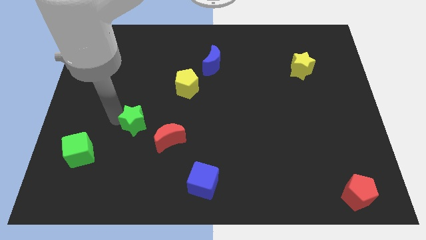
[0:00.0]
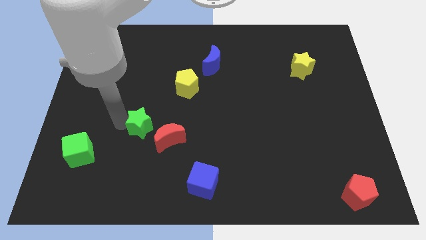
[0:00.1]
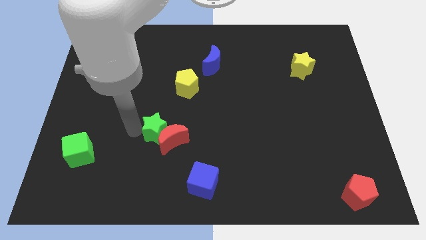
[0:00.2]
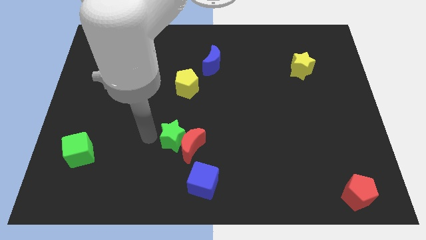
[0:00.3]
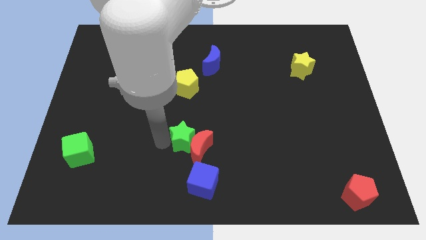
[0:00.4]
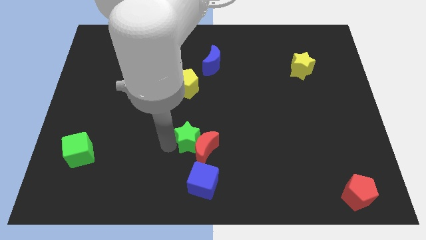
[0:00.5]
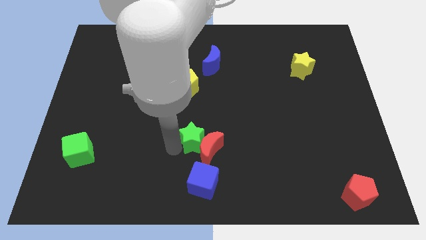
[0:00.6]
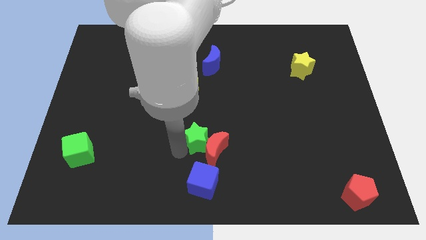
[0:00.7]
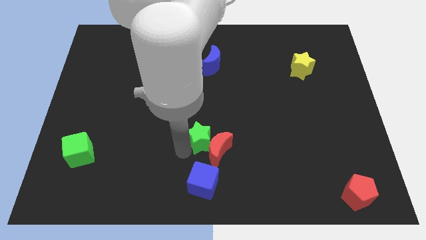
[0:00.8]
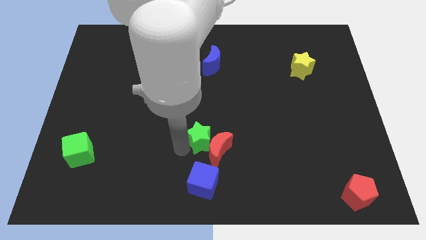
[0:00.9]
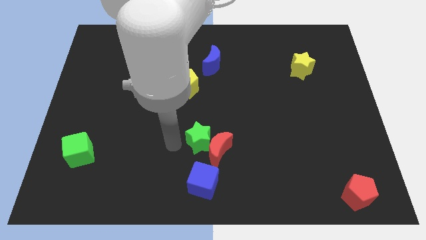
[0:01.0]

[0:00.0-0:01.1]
push the green star and red crescent towards the right side of the board

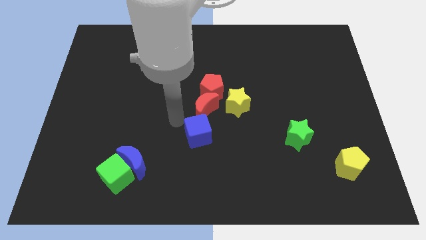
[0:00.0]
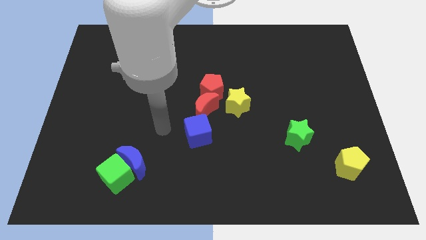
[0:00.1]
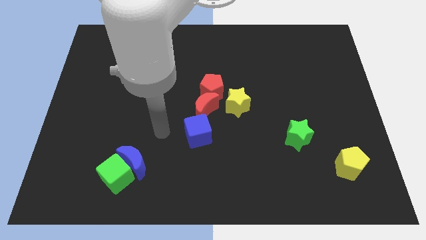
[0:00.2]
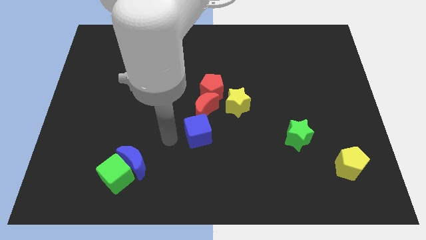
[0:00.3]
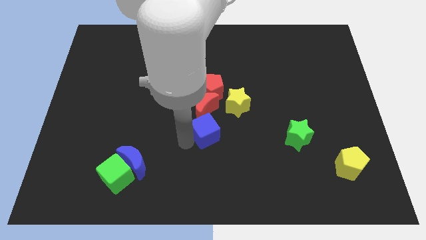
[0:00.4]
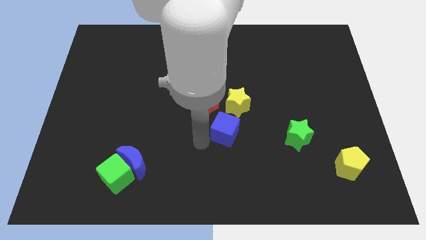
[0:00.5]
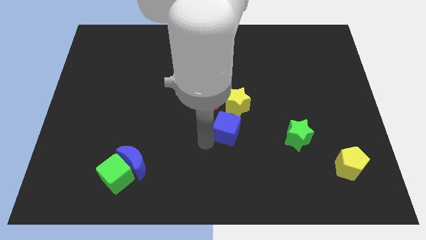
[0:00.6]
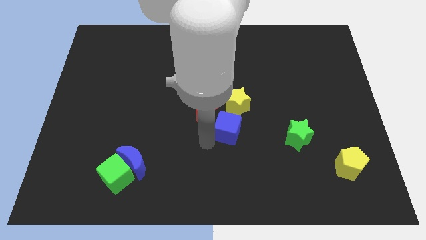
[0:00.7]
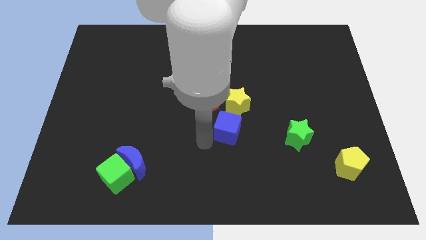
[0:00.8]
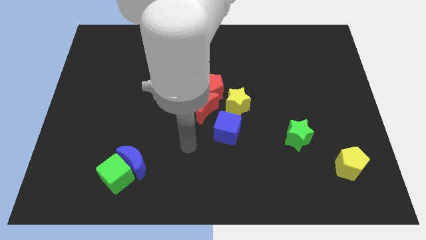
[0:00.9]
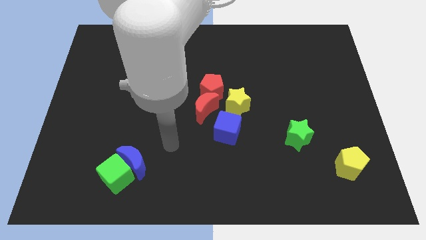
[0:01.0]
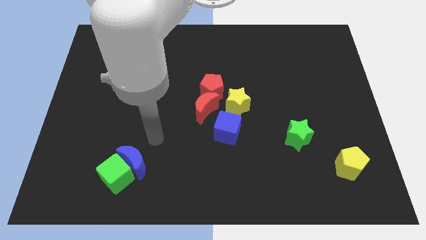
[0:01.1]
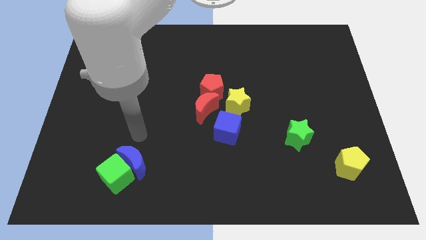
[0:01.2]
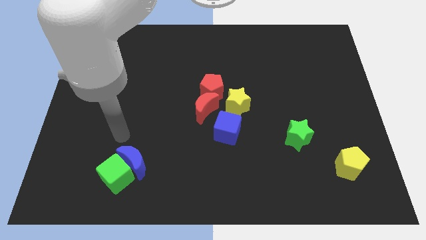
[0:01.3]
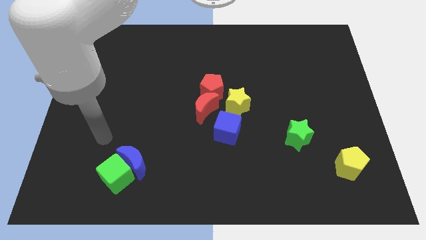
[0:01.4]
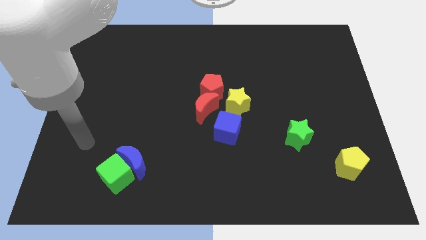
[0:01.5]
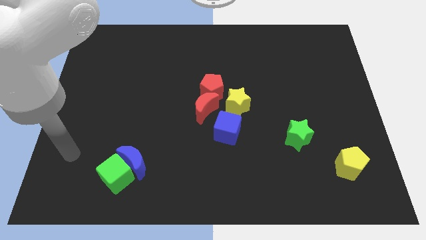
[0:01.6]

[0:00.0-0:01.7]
place the blue cube below the yellow star

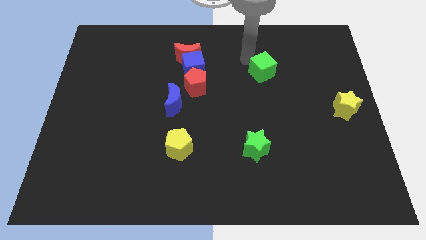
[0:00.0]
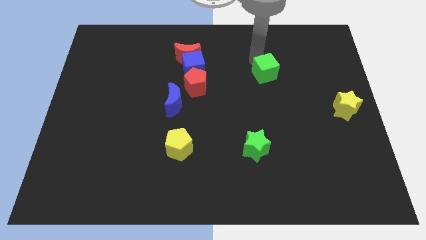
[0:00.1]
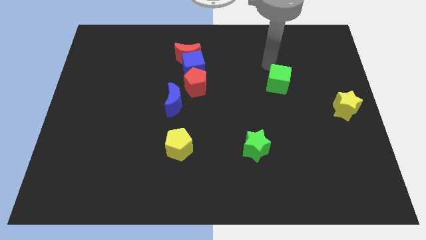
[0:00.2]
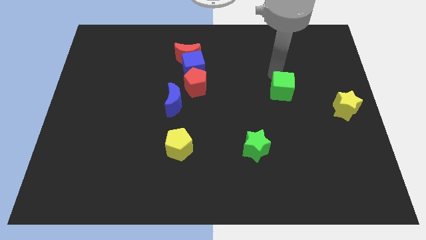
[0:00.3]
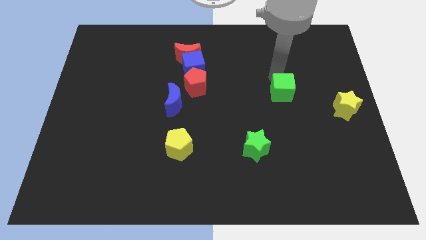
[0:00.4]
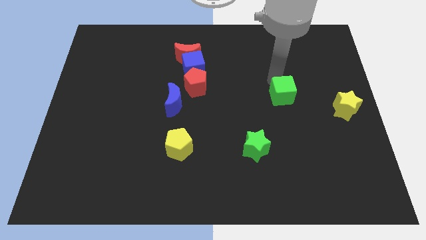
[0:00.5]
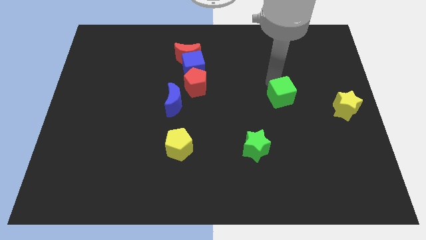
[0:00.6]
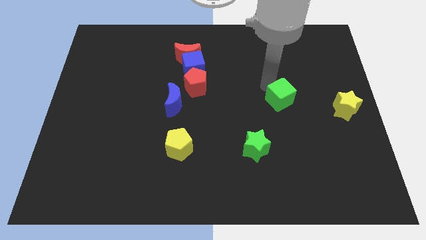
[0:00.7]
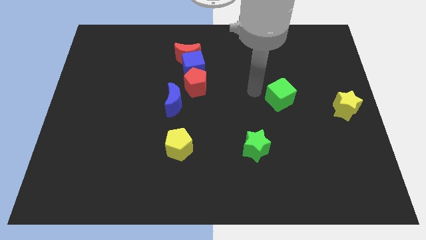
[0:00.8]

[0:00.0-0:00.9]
push the green cube slightly to the bottom of the board

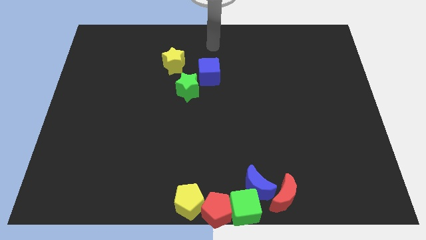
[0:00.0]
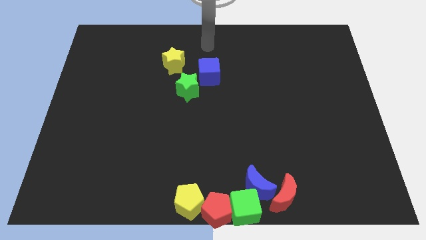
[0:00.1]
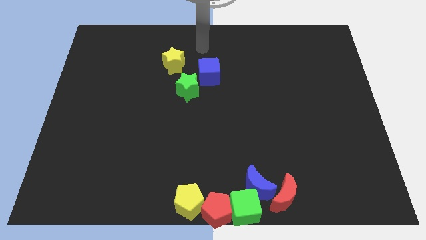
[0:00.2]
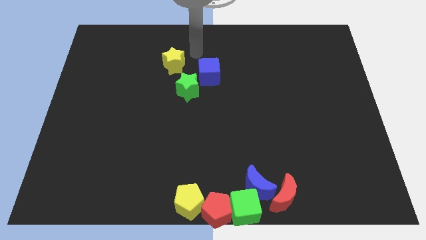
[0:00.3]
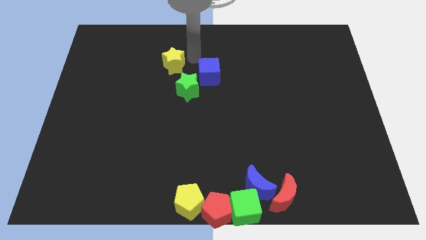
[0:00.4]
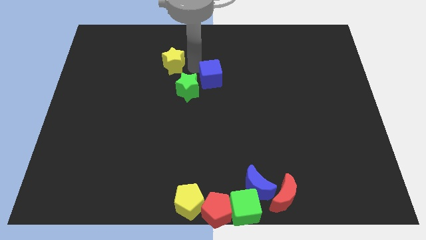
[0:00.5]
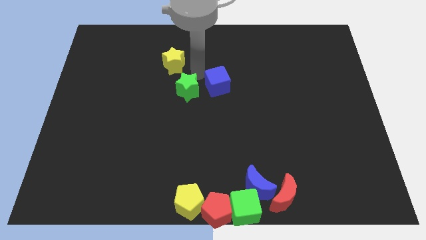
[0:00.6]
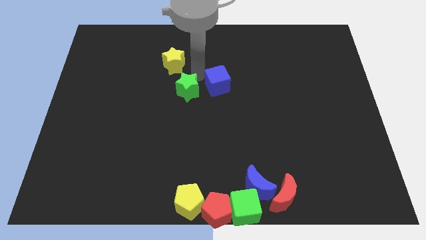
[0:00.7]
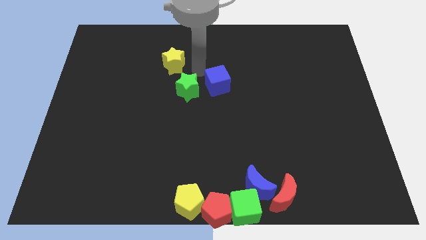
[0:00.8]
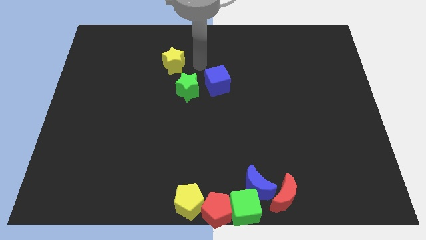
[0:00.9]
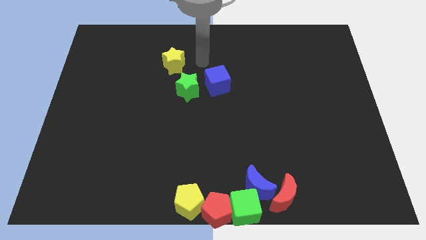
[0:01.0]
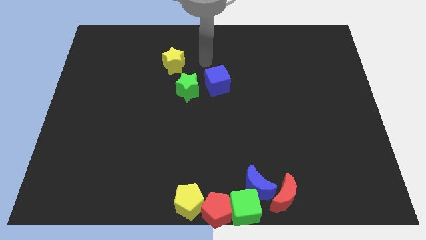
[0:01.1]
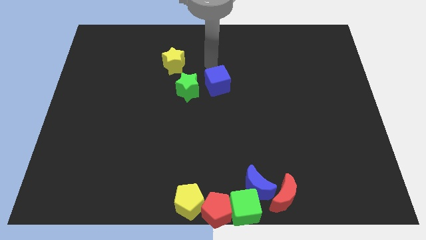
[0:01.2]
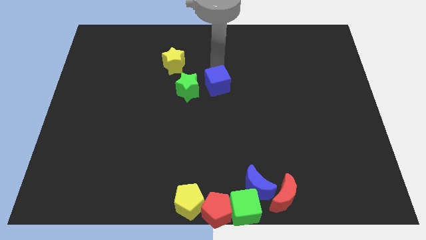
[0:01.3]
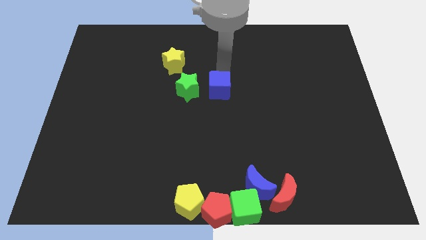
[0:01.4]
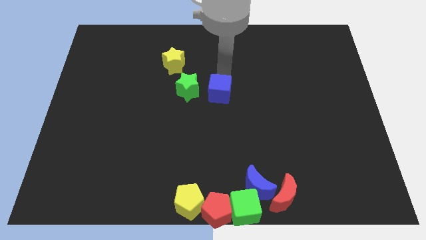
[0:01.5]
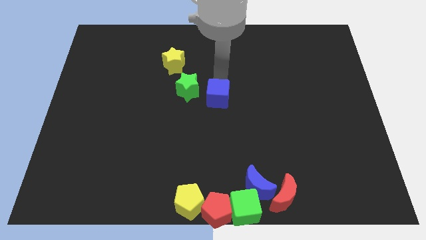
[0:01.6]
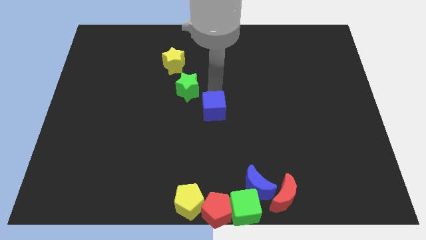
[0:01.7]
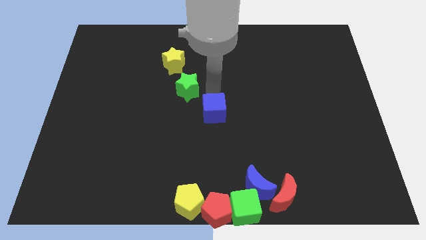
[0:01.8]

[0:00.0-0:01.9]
move the blue cube towards the center of the board

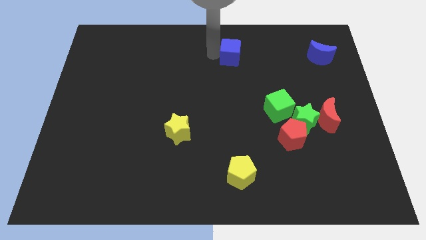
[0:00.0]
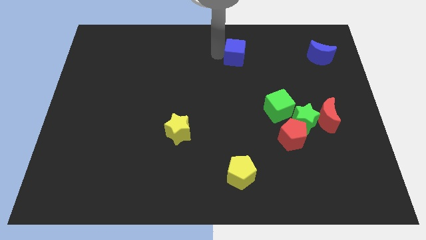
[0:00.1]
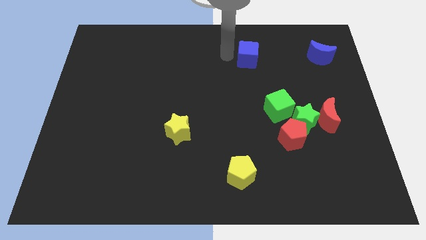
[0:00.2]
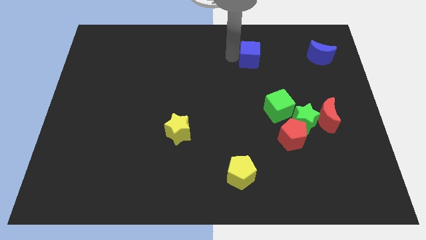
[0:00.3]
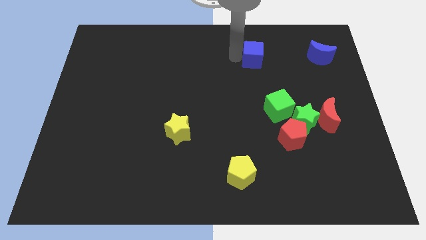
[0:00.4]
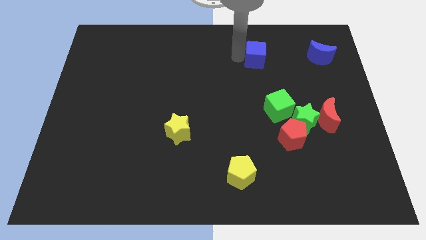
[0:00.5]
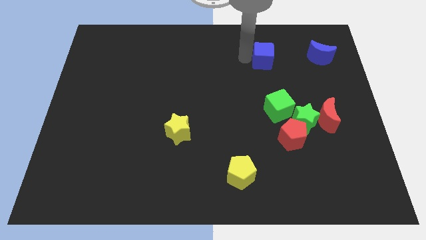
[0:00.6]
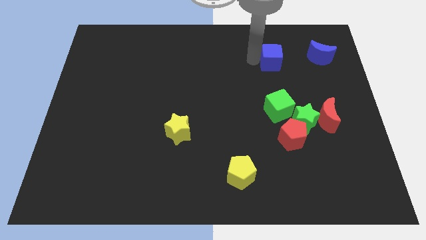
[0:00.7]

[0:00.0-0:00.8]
push blue cube above green cube

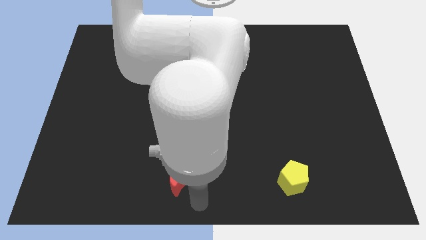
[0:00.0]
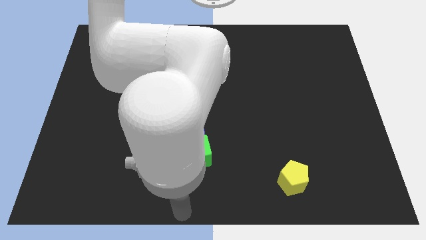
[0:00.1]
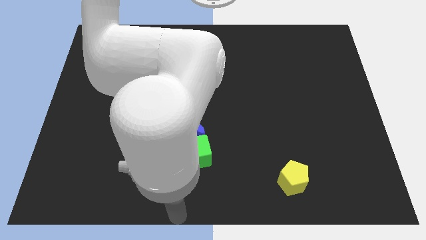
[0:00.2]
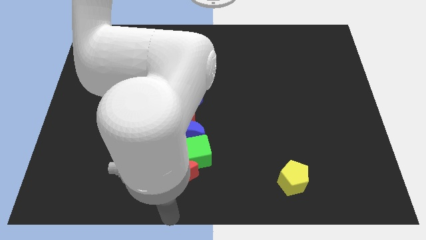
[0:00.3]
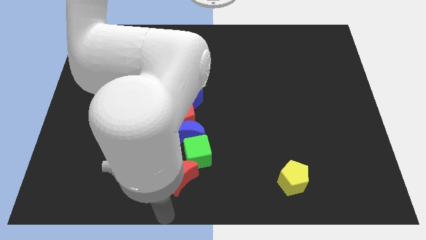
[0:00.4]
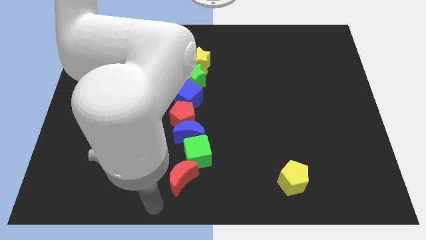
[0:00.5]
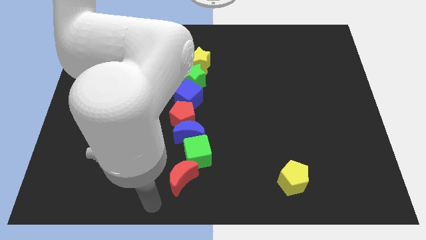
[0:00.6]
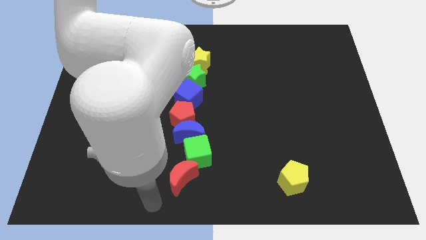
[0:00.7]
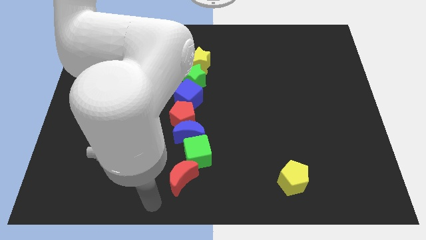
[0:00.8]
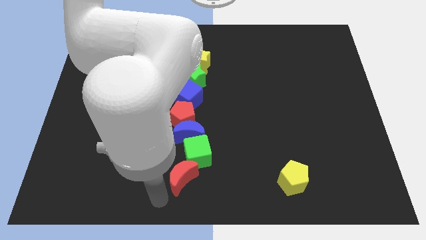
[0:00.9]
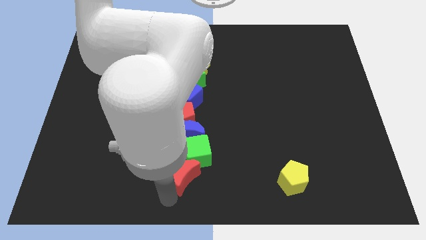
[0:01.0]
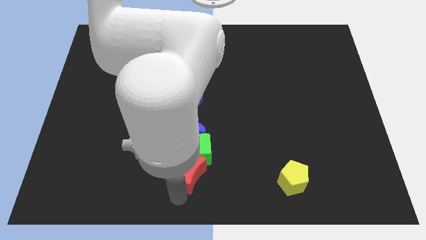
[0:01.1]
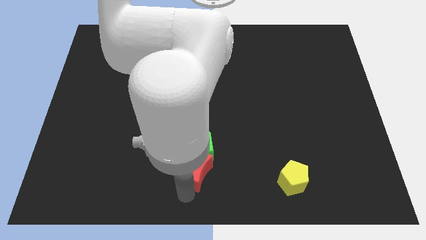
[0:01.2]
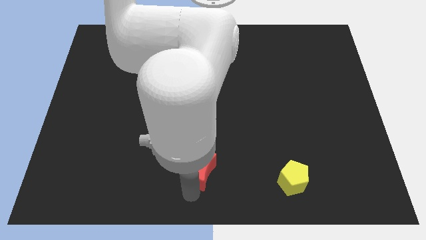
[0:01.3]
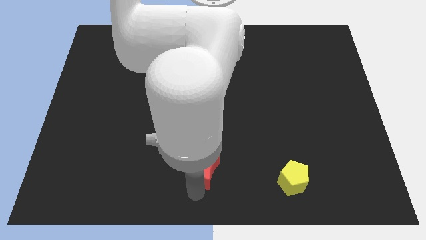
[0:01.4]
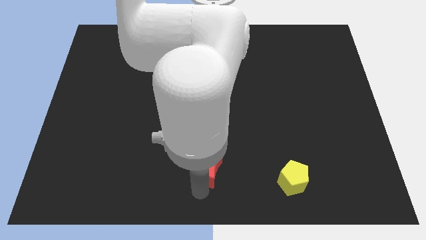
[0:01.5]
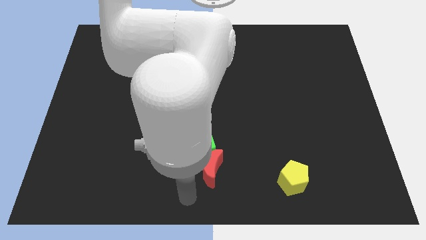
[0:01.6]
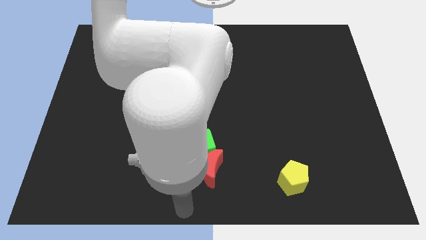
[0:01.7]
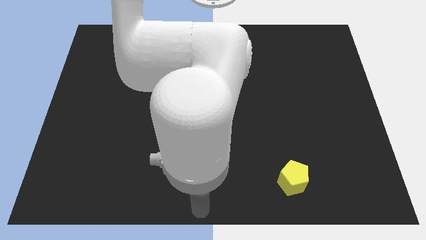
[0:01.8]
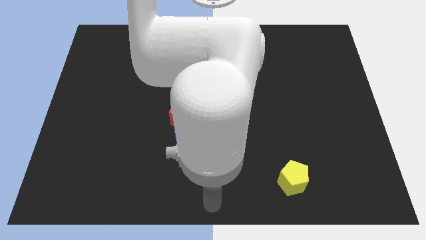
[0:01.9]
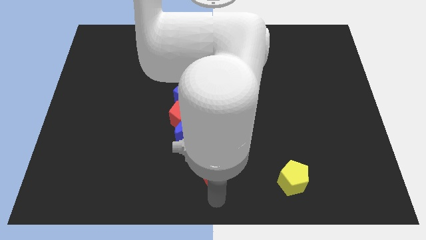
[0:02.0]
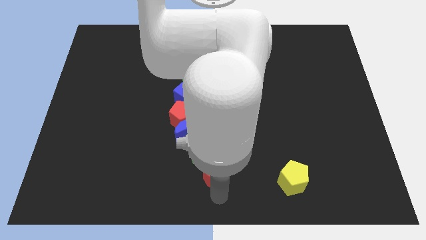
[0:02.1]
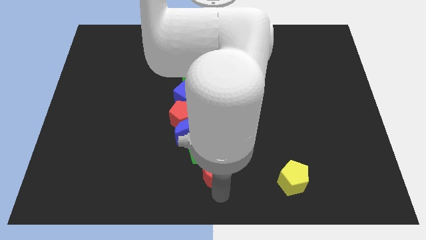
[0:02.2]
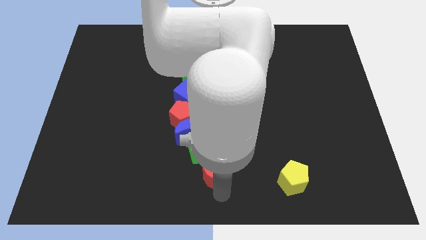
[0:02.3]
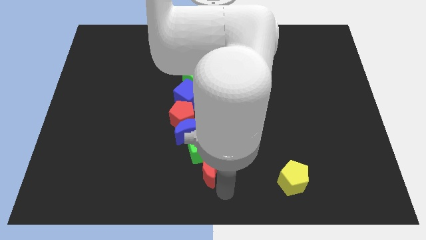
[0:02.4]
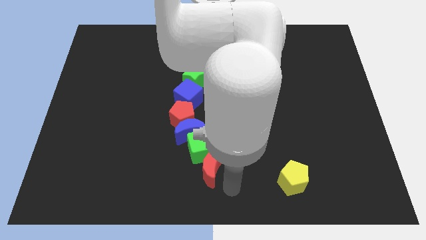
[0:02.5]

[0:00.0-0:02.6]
move red moon slightly right

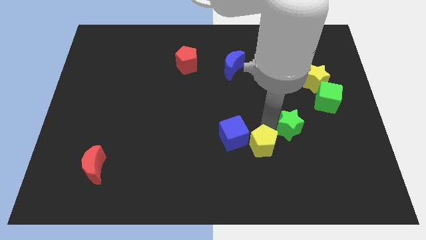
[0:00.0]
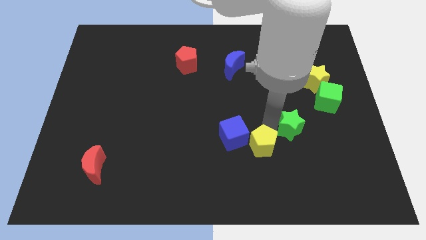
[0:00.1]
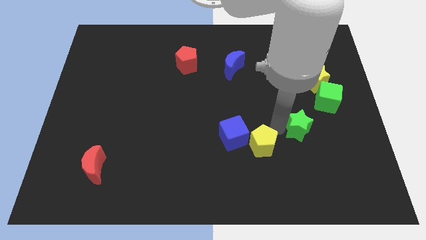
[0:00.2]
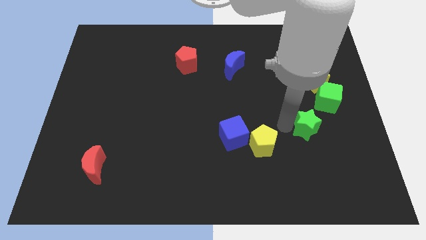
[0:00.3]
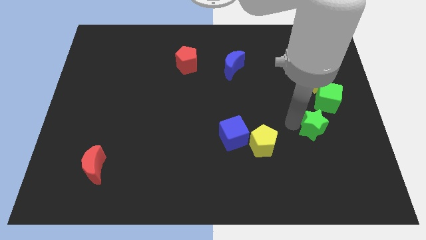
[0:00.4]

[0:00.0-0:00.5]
separate green star away from yellow pentagon
